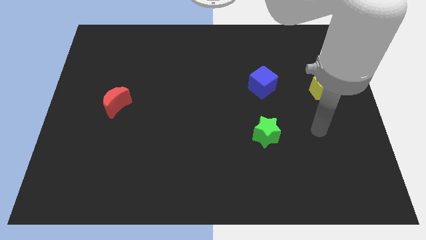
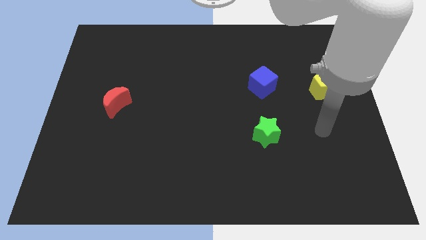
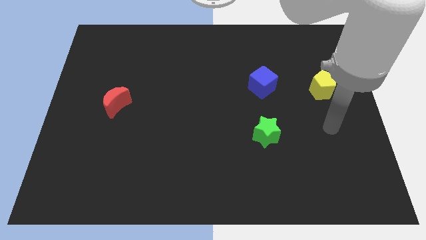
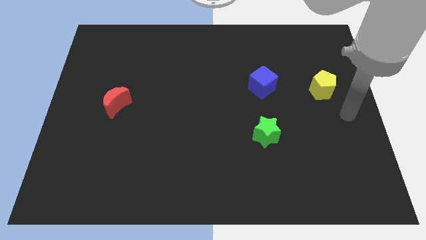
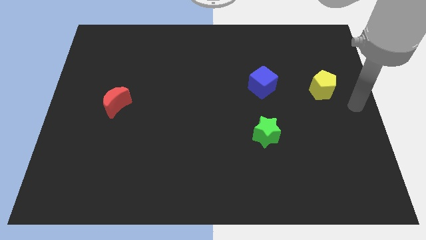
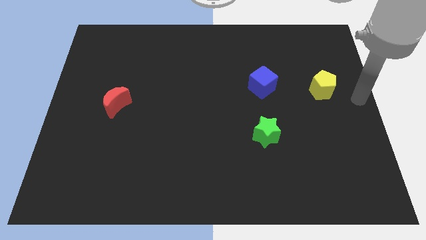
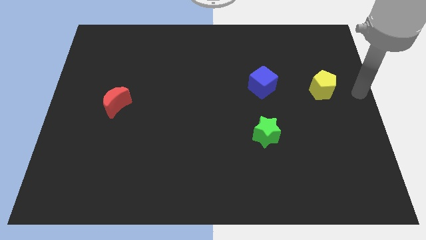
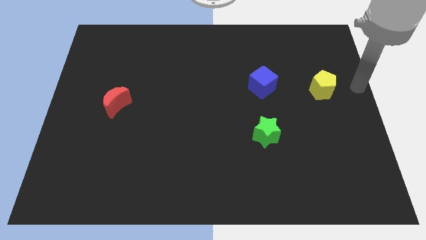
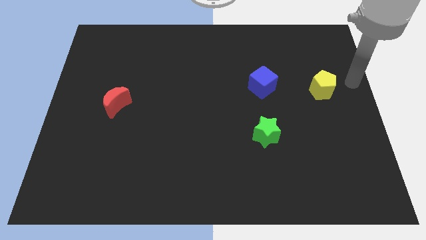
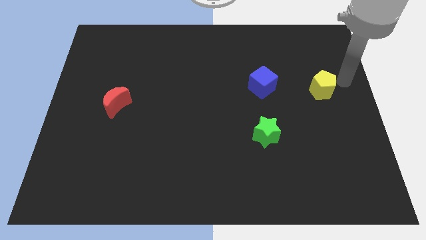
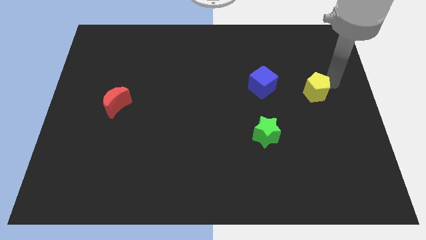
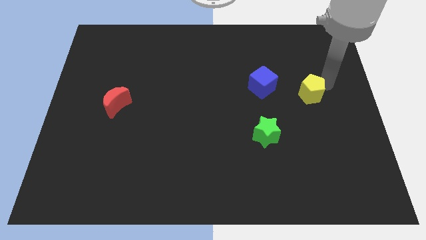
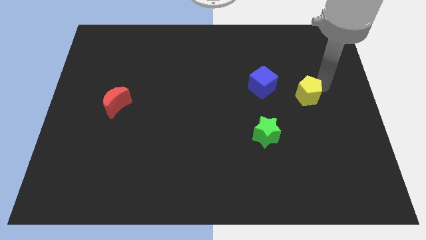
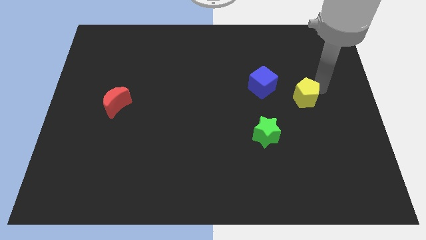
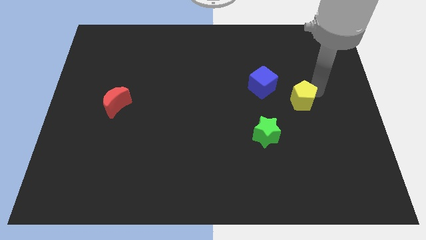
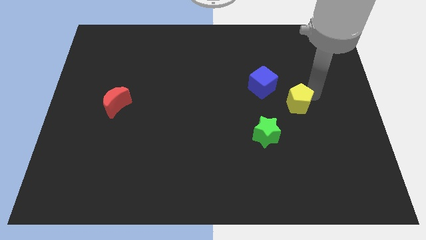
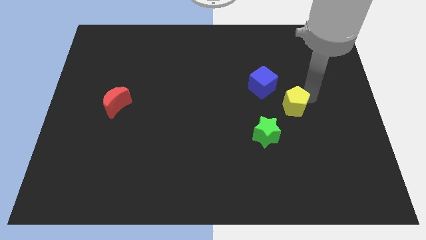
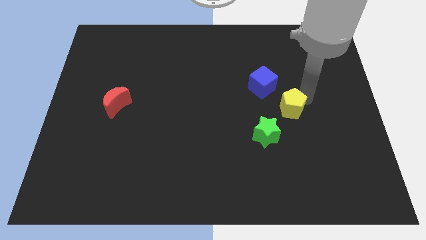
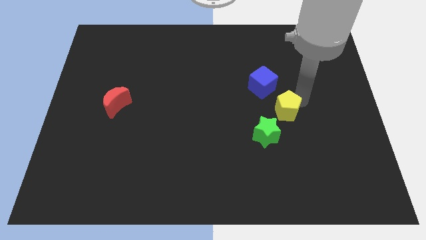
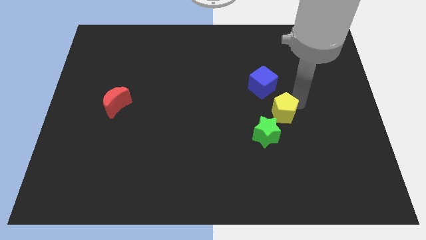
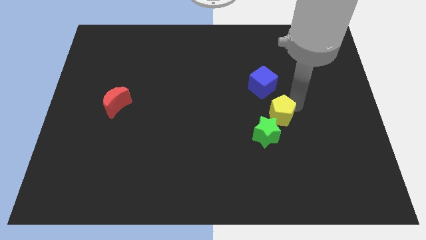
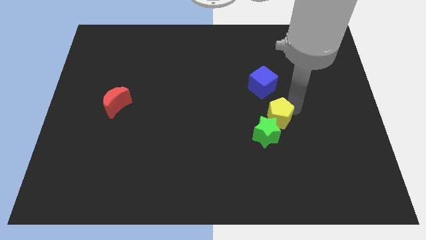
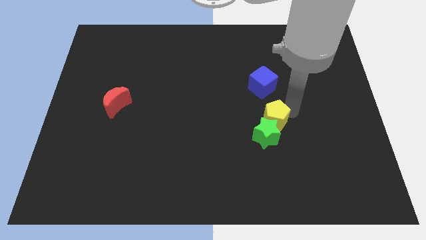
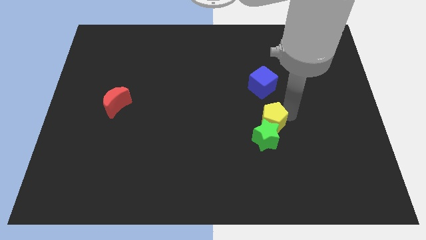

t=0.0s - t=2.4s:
push the yellow block close to the star

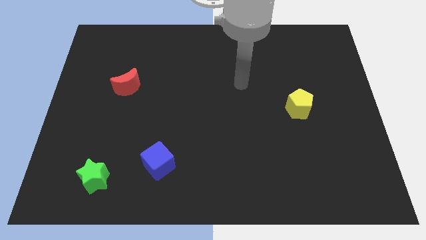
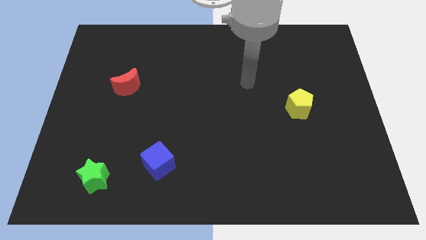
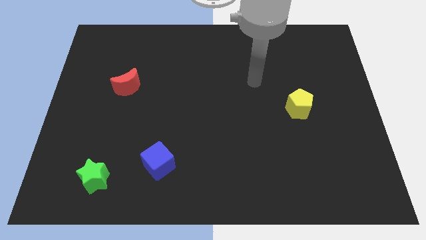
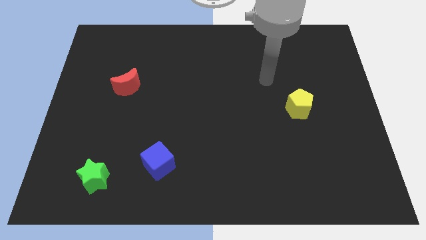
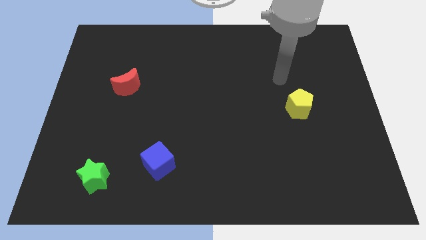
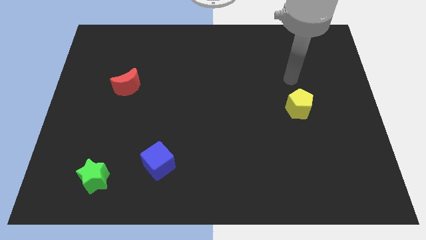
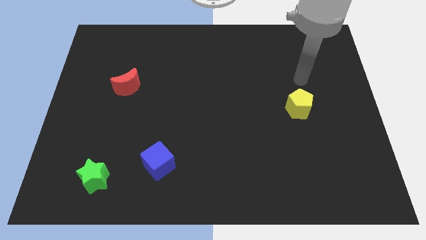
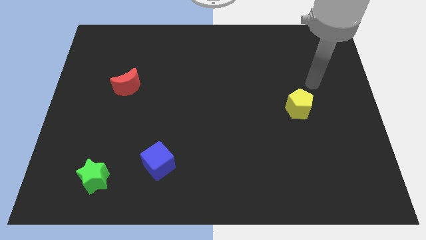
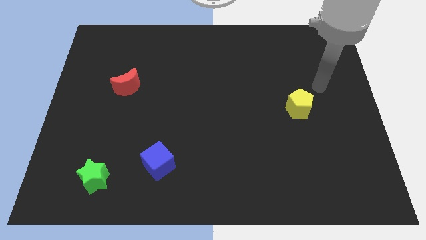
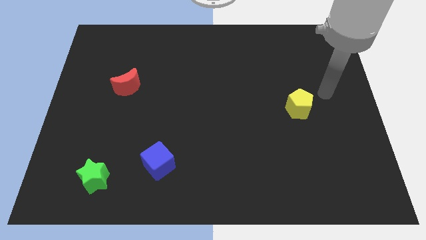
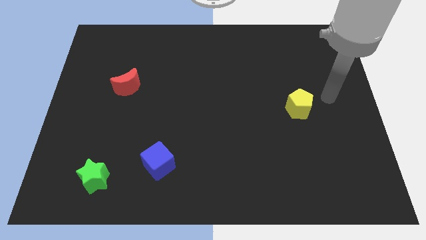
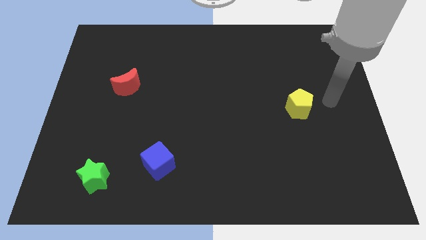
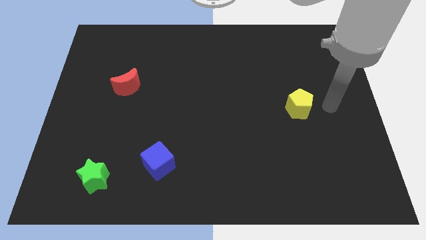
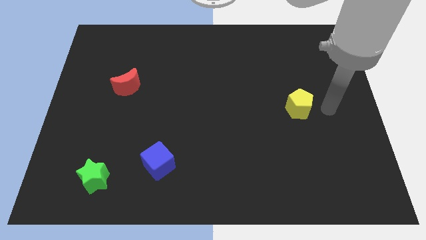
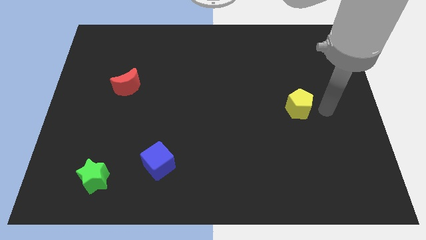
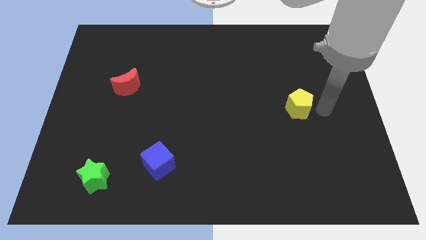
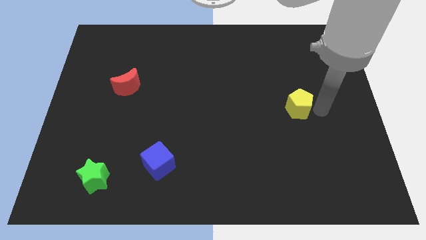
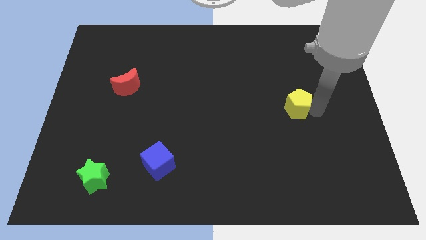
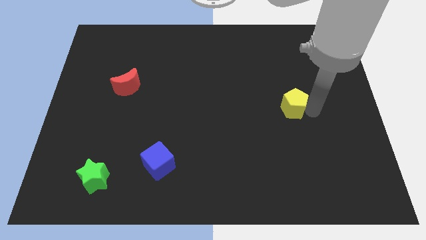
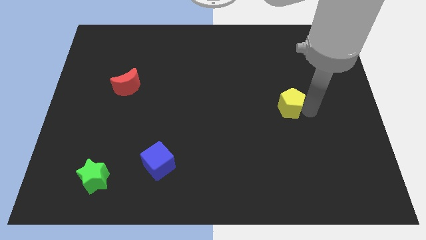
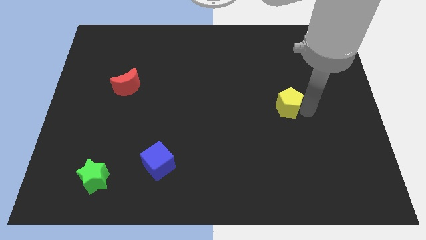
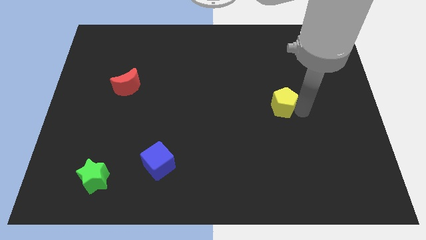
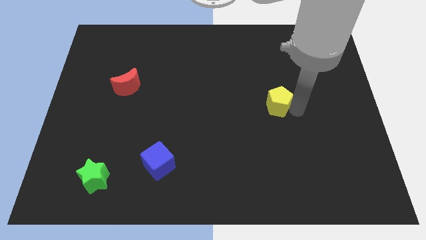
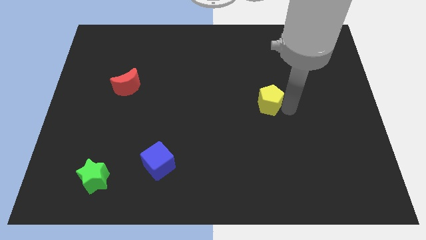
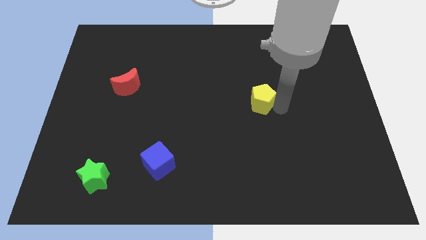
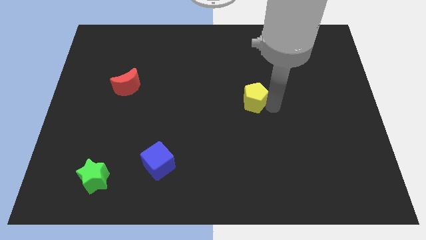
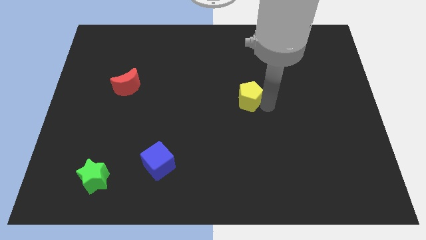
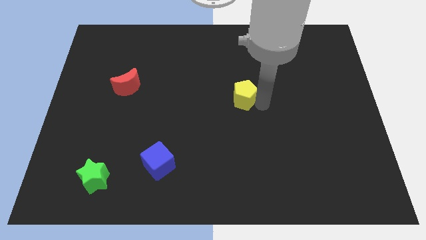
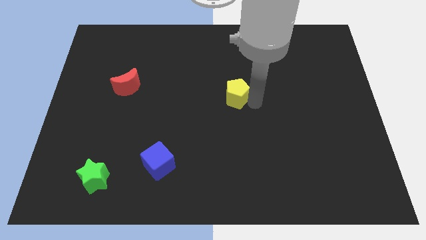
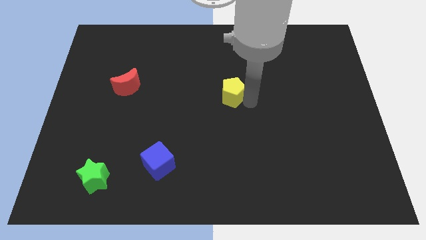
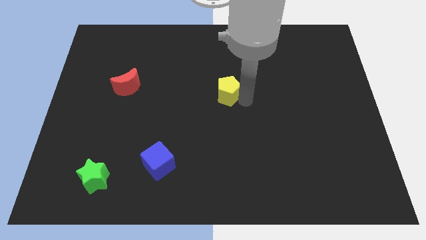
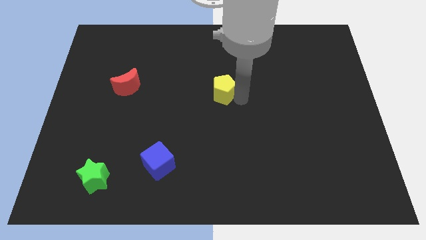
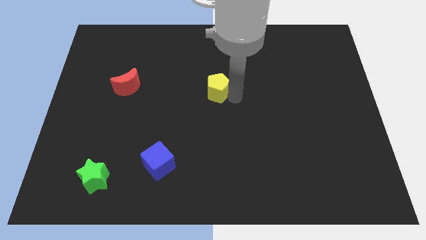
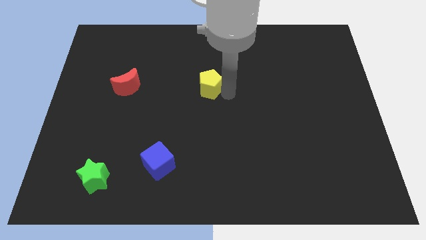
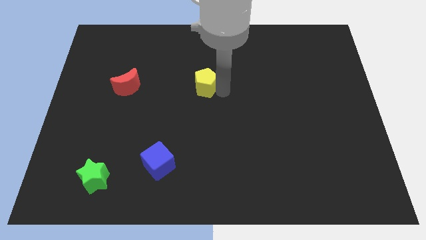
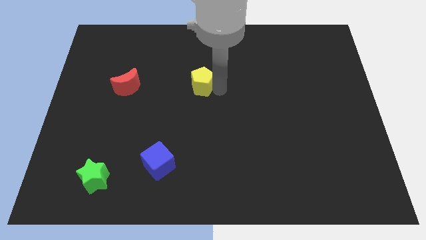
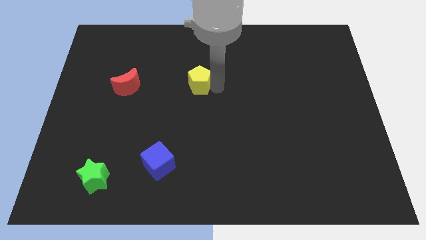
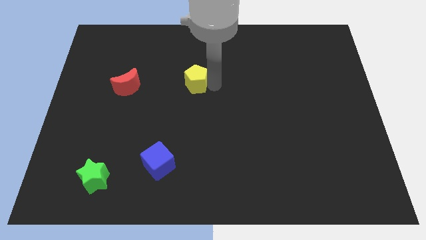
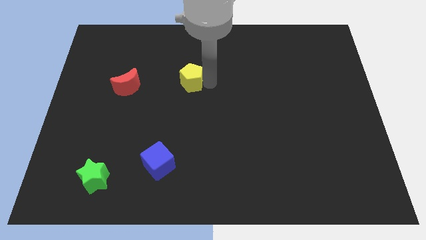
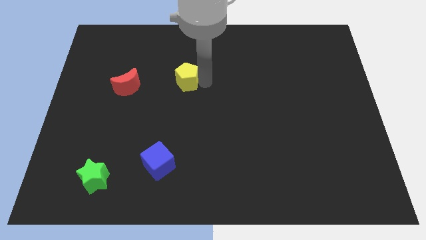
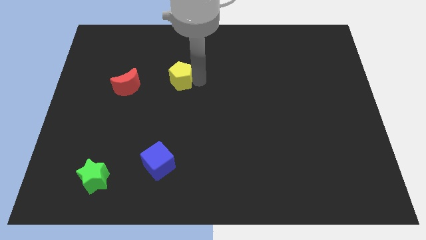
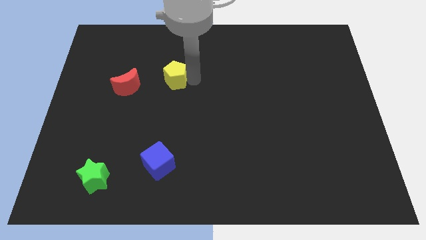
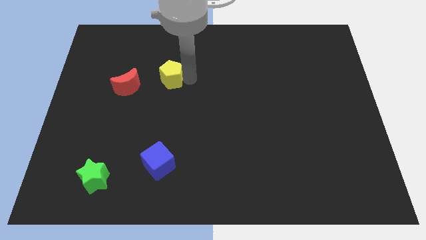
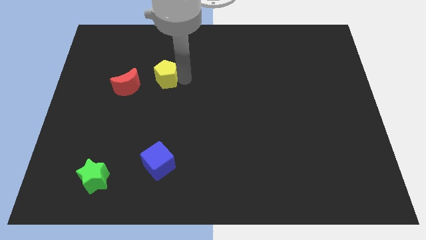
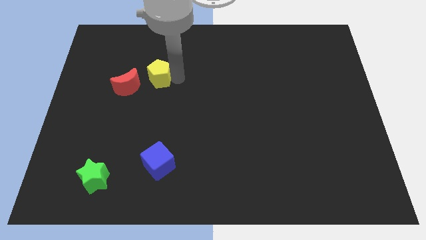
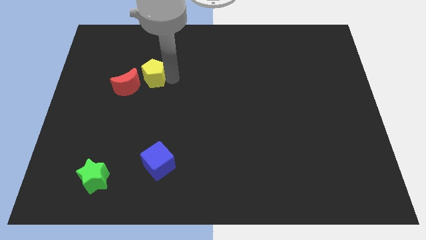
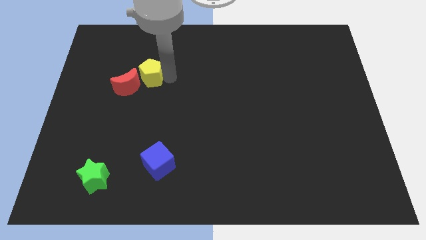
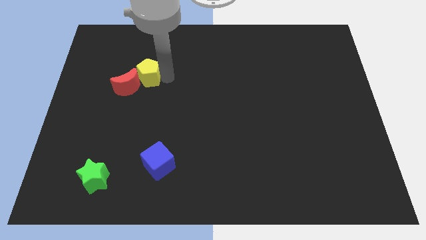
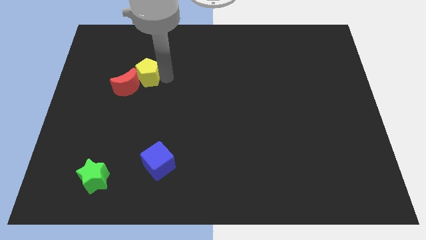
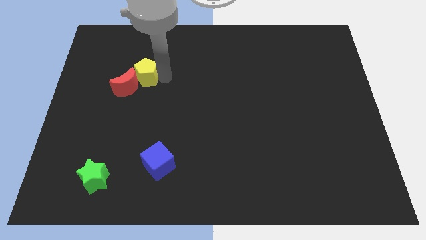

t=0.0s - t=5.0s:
move the pentagon to the moon

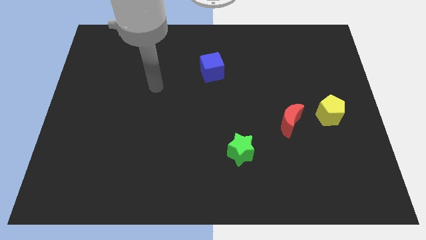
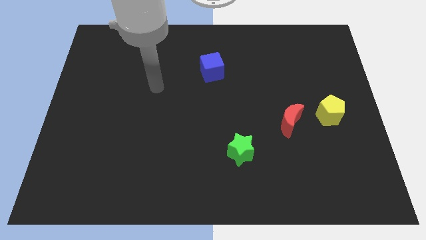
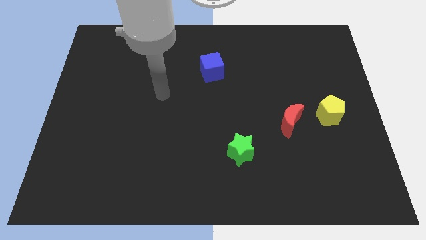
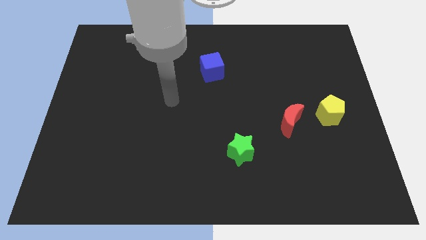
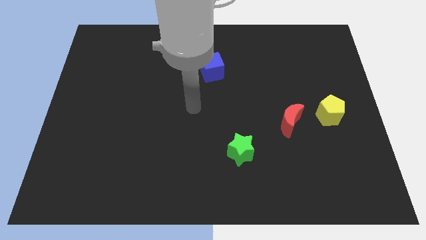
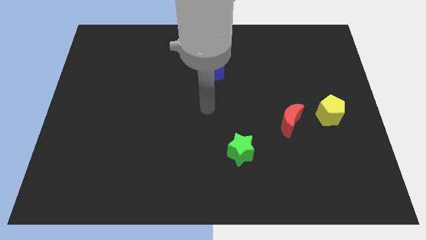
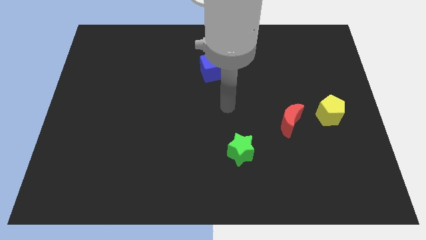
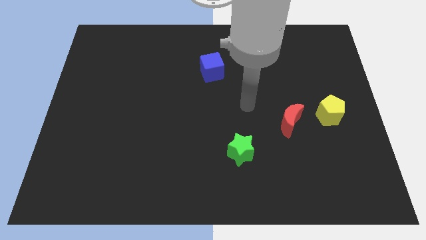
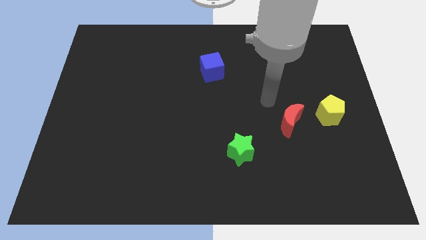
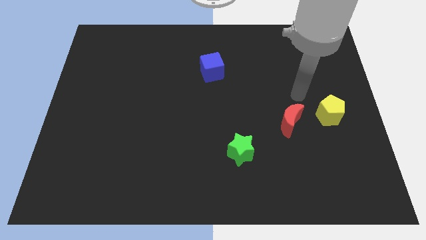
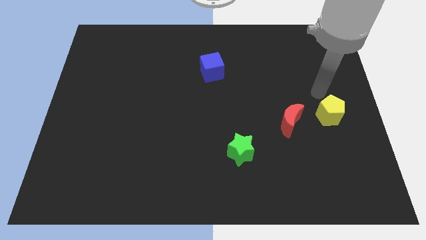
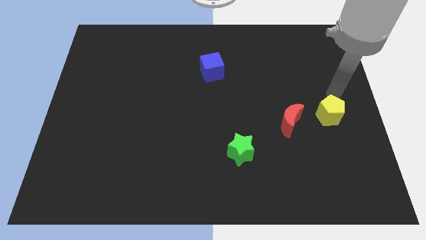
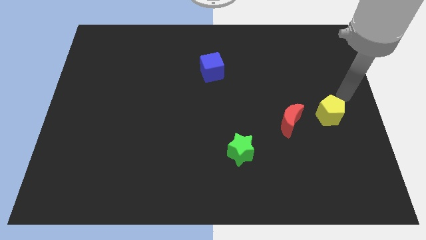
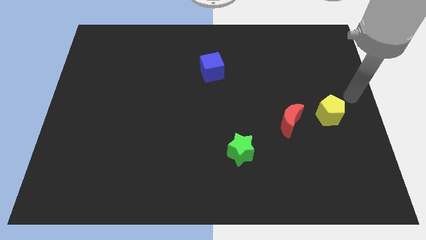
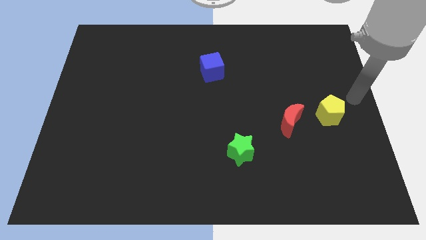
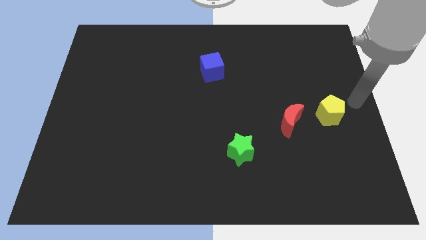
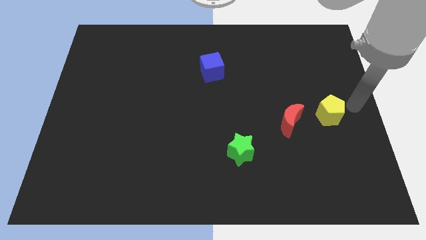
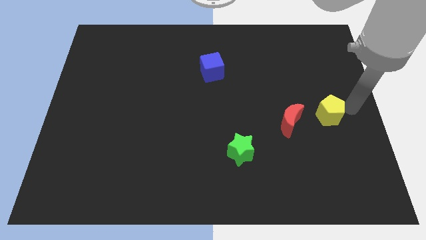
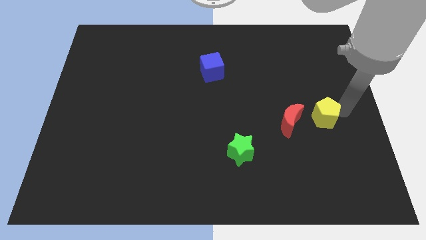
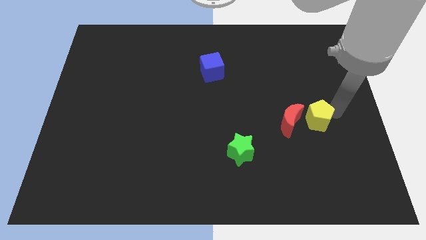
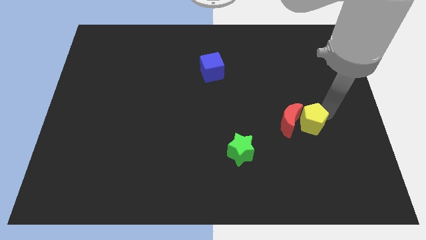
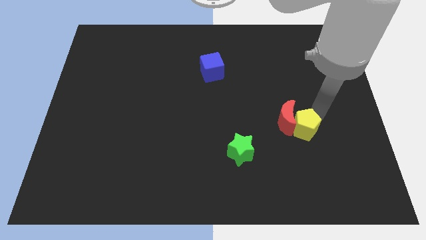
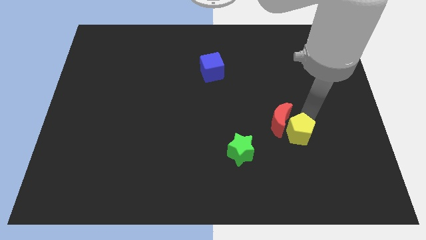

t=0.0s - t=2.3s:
put the pentagon towards the red block
